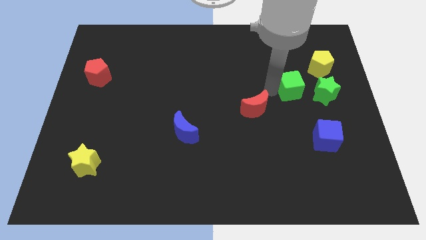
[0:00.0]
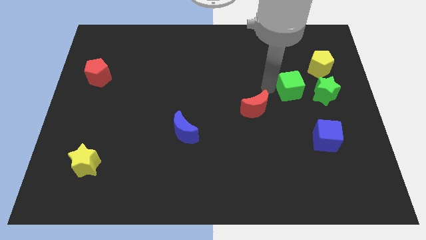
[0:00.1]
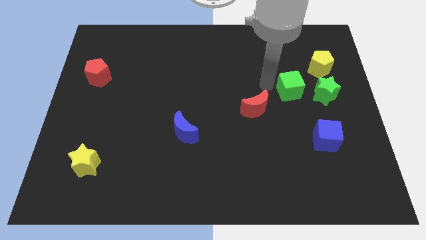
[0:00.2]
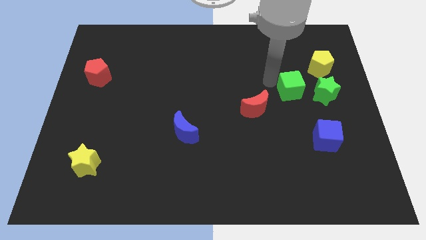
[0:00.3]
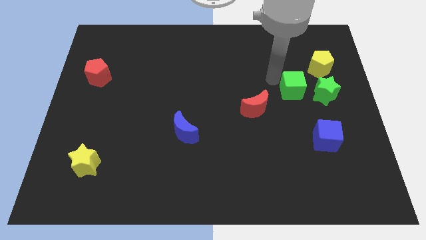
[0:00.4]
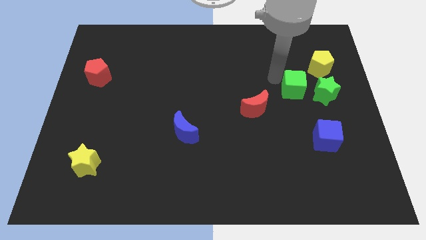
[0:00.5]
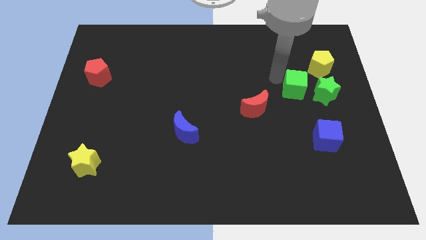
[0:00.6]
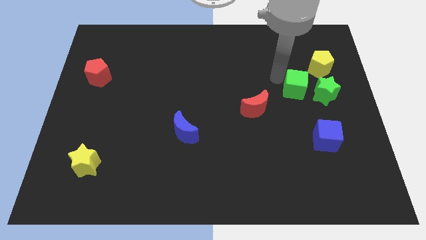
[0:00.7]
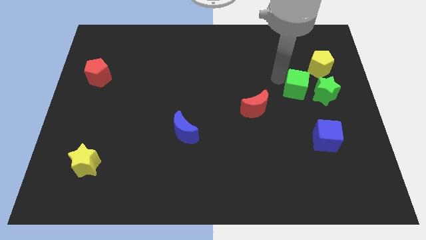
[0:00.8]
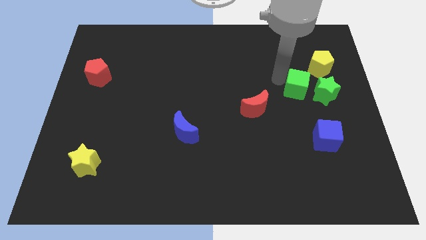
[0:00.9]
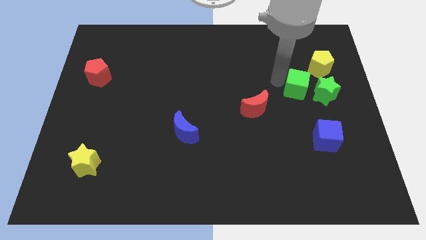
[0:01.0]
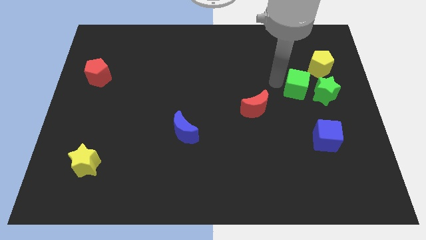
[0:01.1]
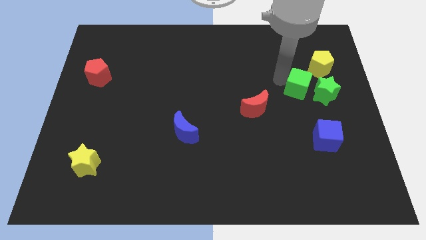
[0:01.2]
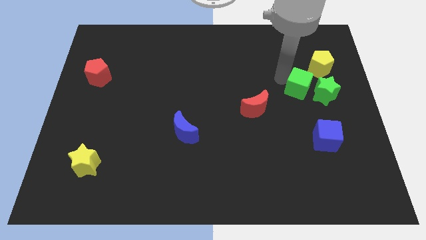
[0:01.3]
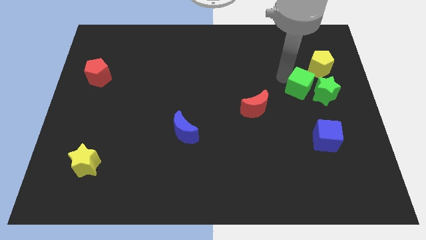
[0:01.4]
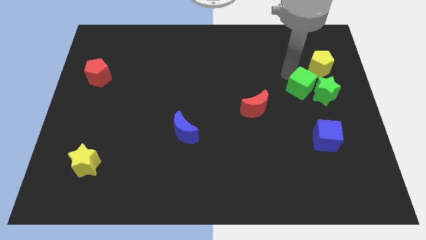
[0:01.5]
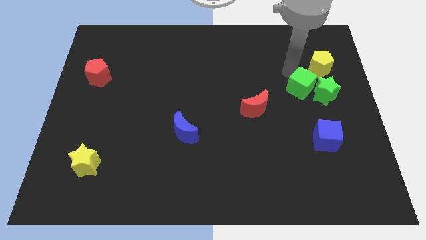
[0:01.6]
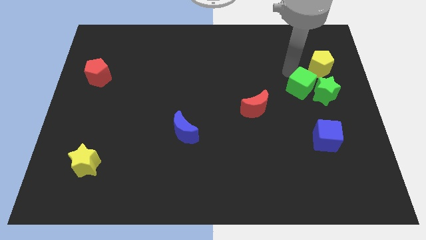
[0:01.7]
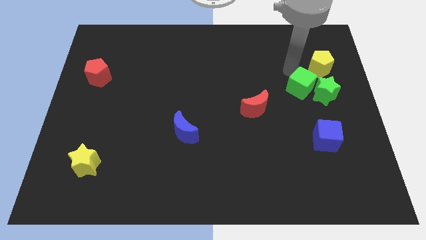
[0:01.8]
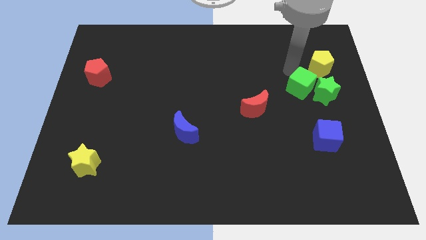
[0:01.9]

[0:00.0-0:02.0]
slide the green cube slightly towards the green star

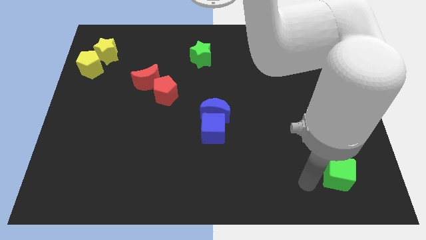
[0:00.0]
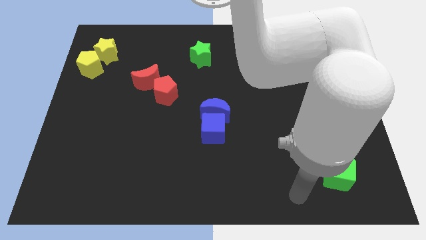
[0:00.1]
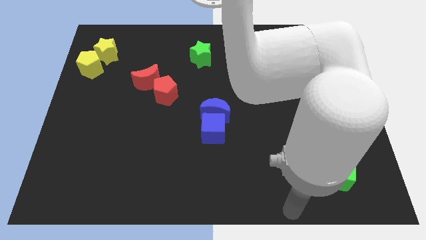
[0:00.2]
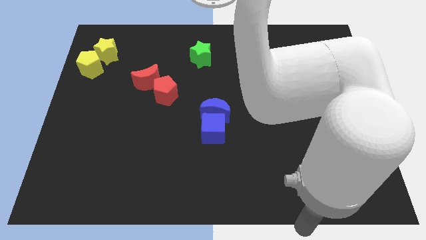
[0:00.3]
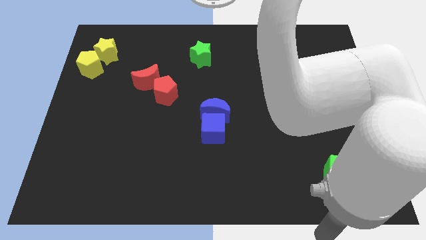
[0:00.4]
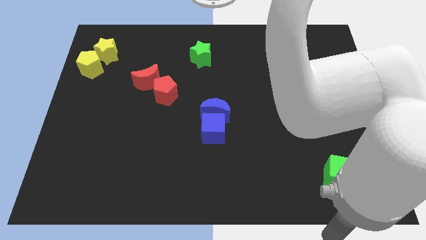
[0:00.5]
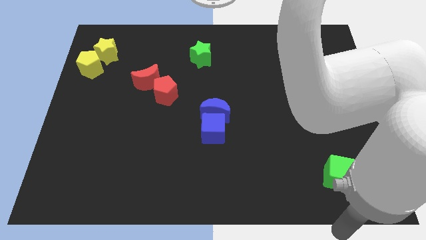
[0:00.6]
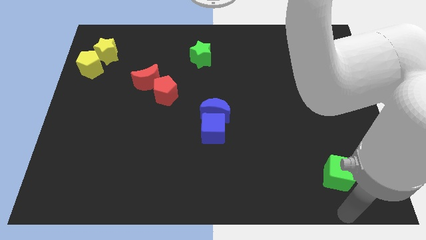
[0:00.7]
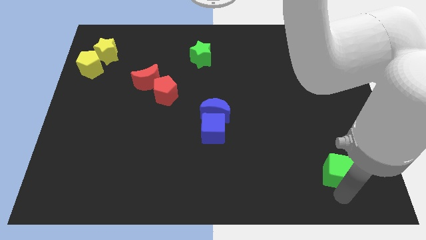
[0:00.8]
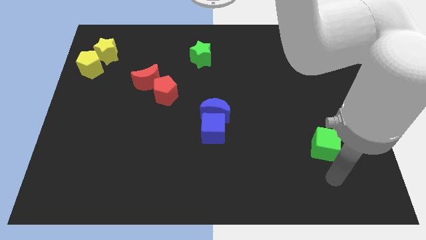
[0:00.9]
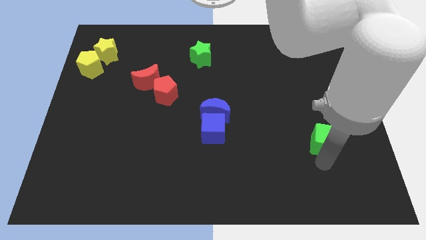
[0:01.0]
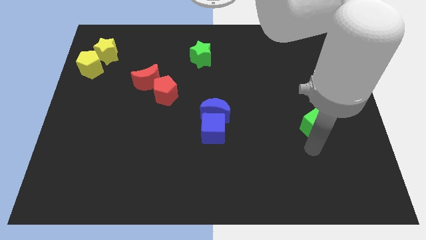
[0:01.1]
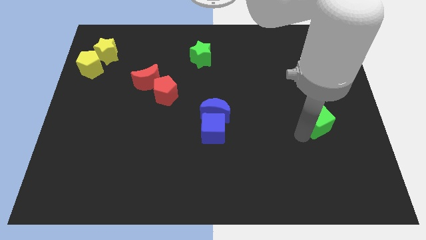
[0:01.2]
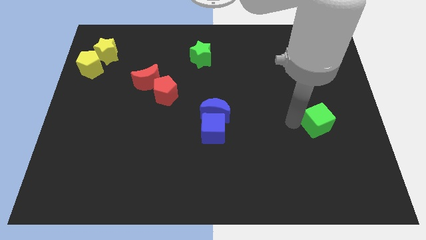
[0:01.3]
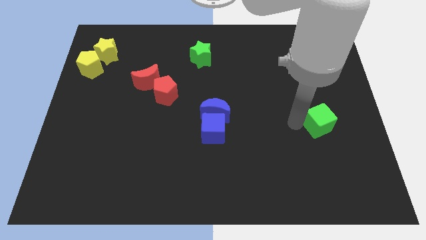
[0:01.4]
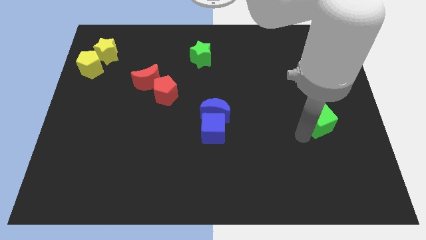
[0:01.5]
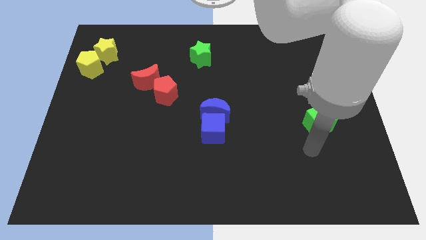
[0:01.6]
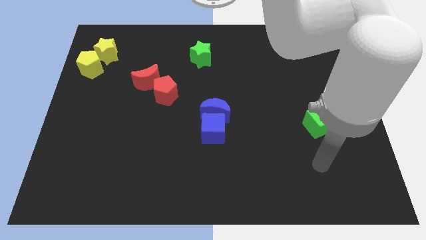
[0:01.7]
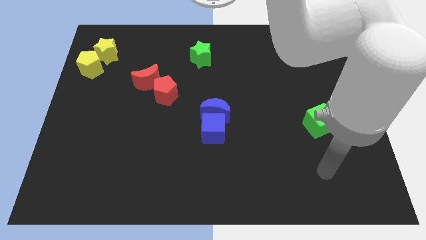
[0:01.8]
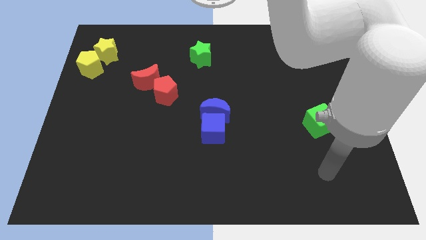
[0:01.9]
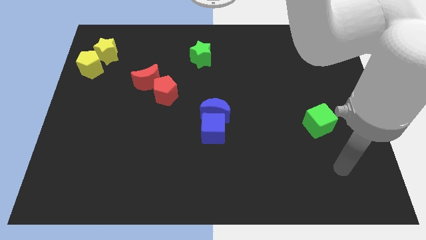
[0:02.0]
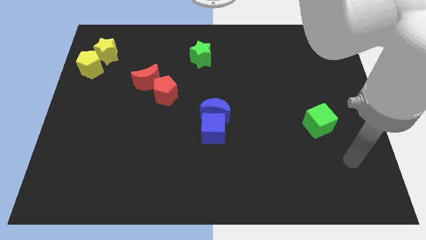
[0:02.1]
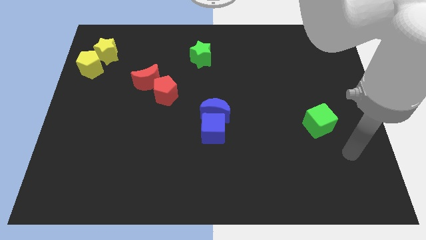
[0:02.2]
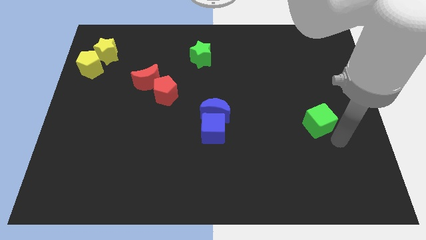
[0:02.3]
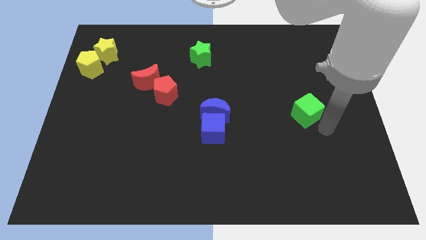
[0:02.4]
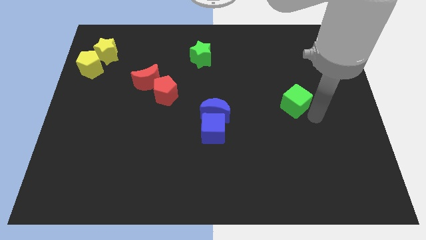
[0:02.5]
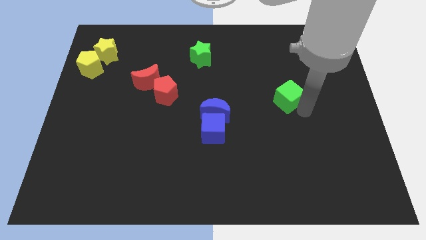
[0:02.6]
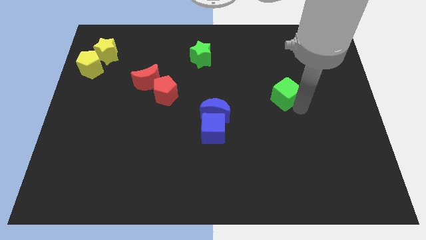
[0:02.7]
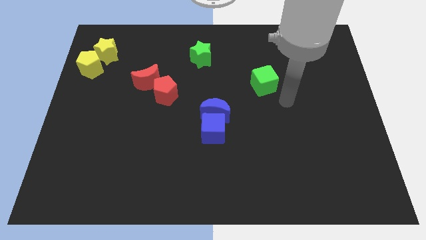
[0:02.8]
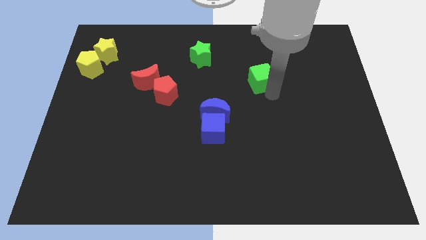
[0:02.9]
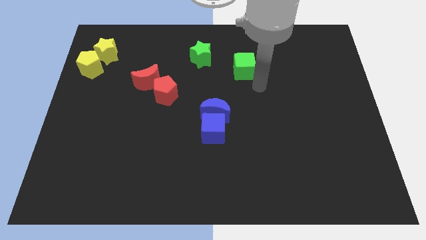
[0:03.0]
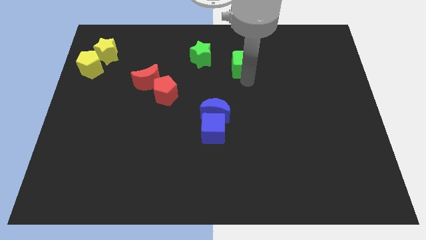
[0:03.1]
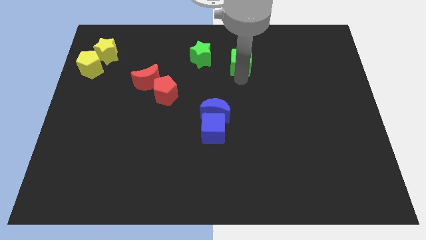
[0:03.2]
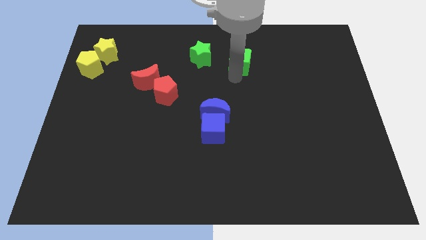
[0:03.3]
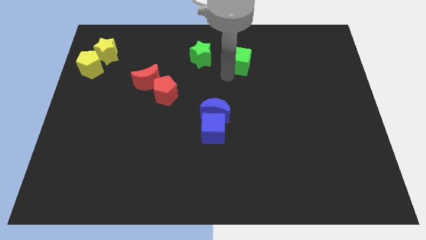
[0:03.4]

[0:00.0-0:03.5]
move the green cube towards the green star

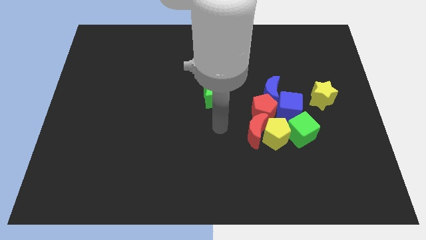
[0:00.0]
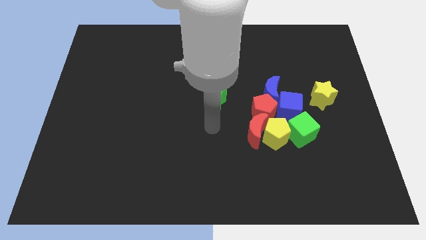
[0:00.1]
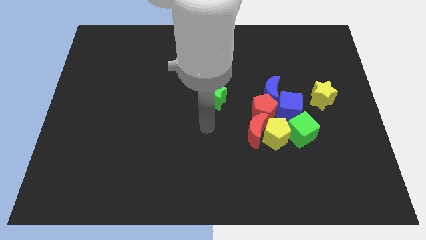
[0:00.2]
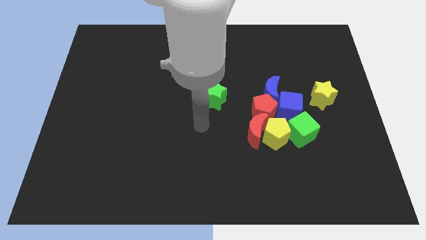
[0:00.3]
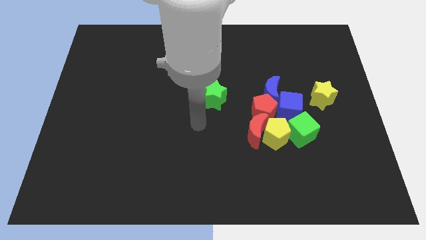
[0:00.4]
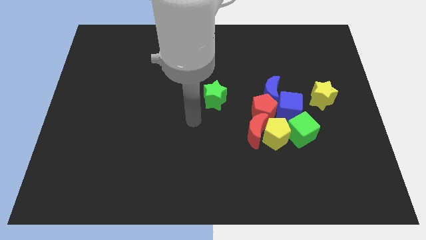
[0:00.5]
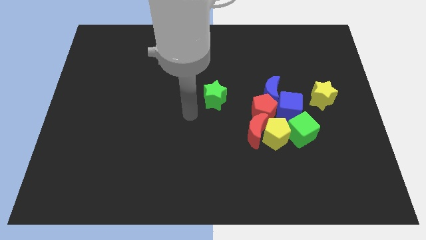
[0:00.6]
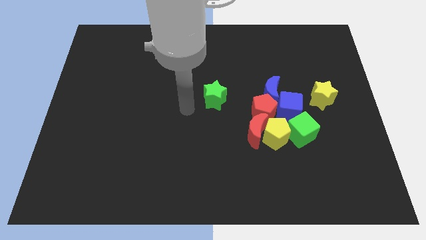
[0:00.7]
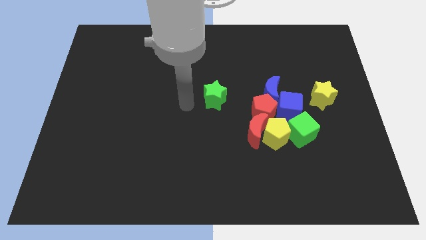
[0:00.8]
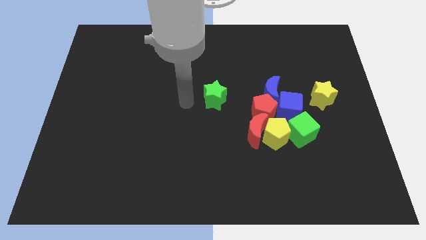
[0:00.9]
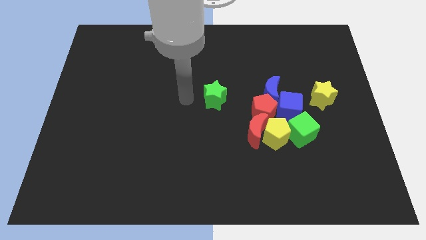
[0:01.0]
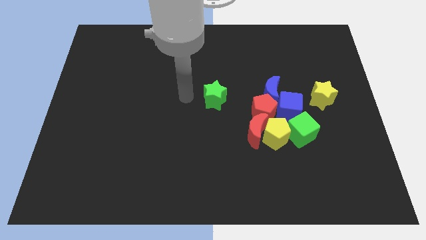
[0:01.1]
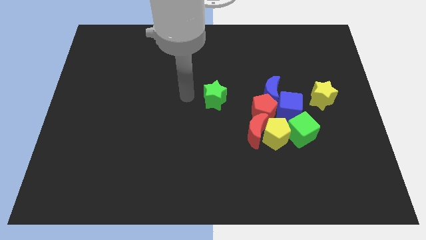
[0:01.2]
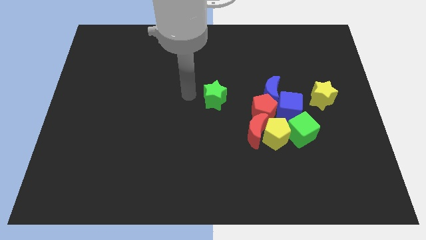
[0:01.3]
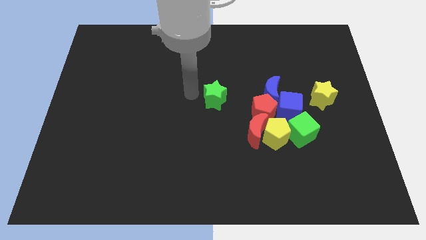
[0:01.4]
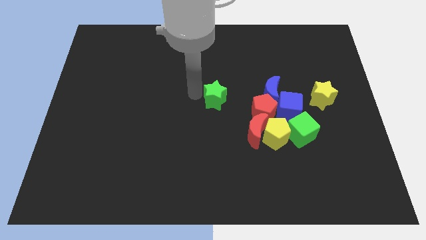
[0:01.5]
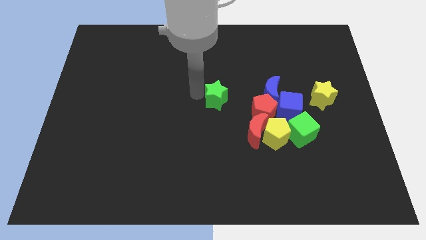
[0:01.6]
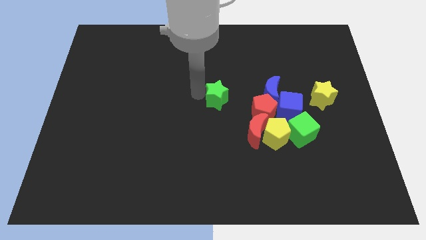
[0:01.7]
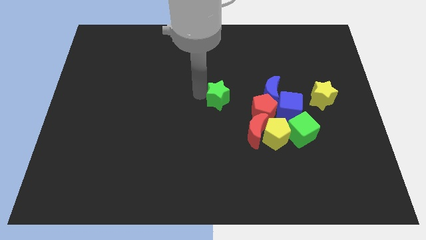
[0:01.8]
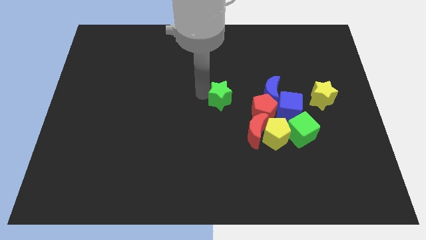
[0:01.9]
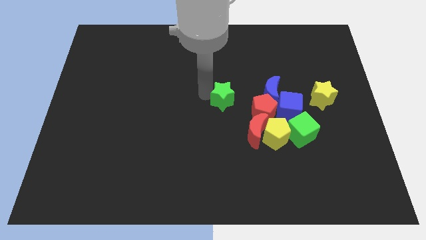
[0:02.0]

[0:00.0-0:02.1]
touch left side of green star

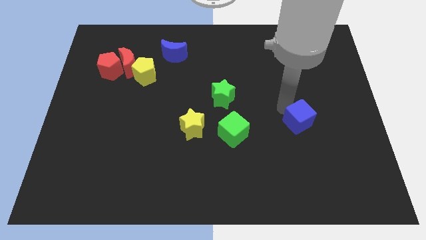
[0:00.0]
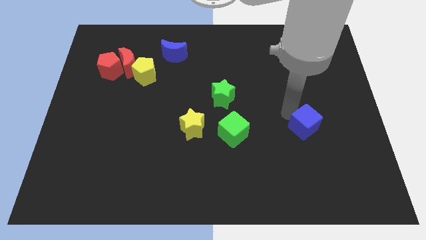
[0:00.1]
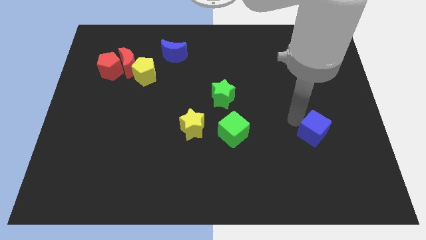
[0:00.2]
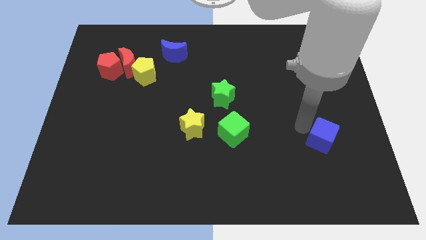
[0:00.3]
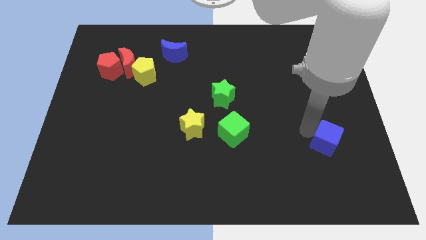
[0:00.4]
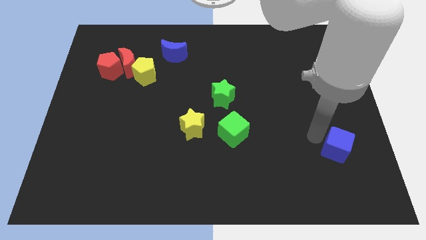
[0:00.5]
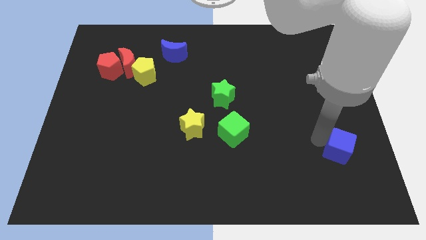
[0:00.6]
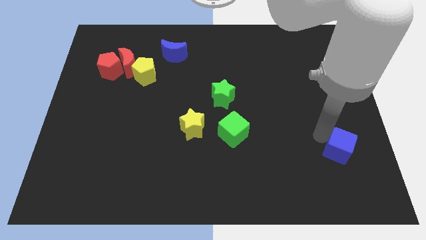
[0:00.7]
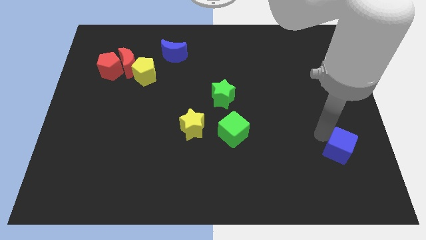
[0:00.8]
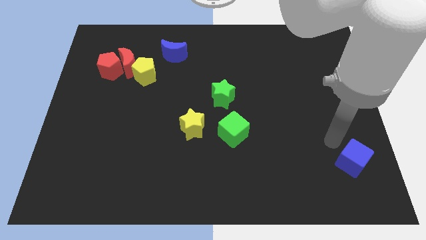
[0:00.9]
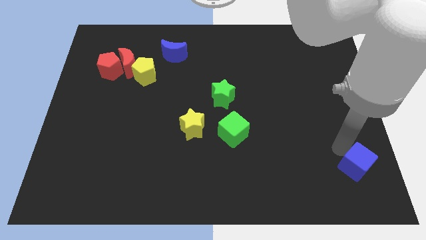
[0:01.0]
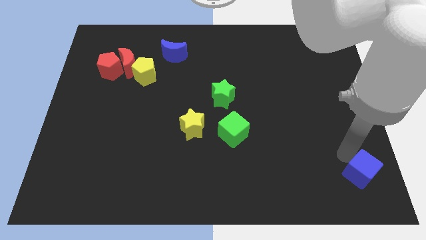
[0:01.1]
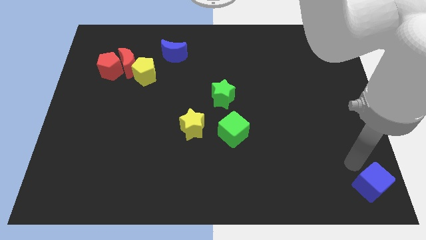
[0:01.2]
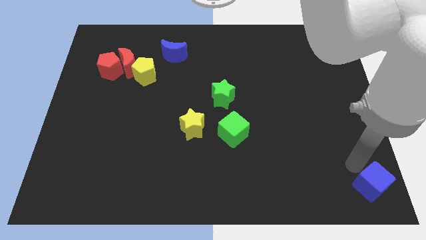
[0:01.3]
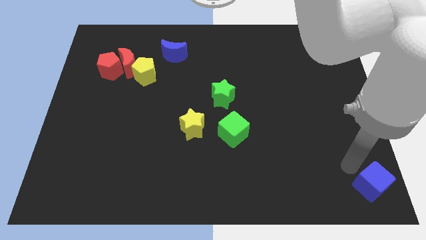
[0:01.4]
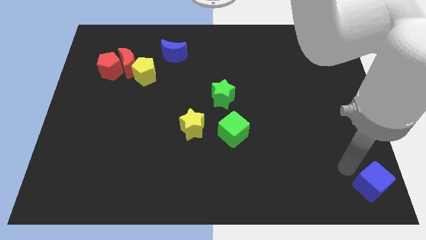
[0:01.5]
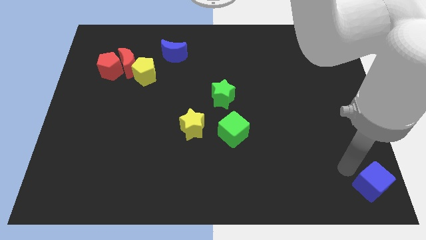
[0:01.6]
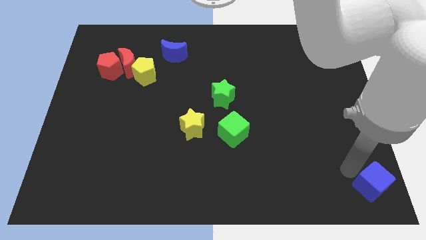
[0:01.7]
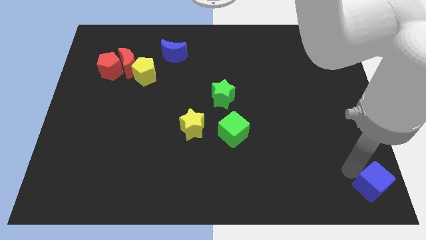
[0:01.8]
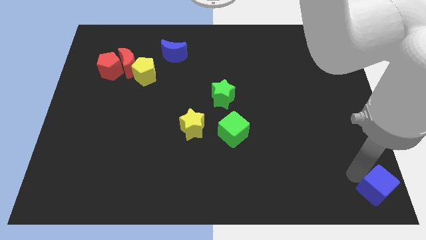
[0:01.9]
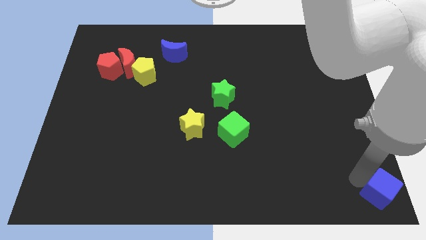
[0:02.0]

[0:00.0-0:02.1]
push the blue cube diagonally to green cube
